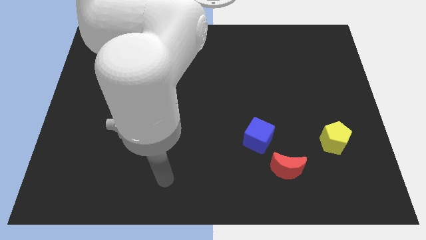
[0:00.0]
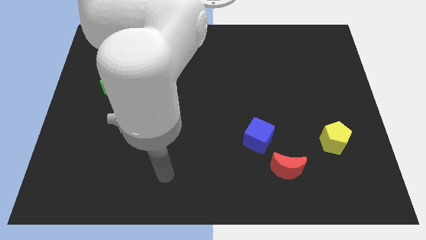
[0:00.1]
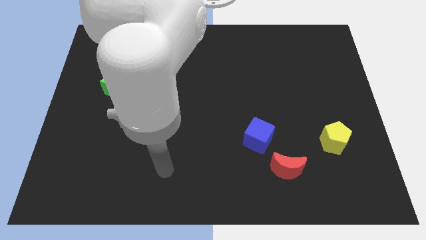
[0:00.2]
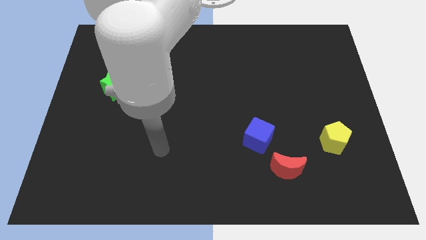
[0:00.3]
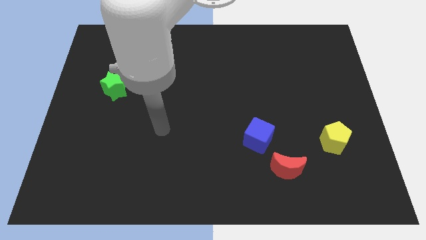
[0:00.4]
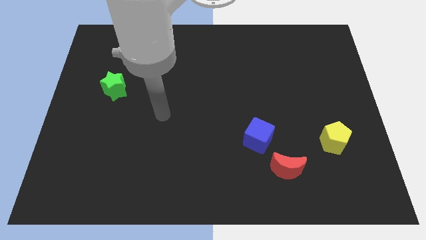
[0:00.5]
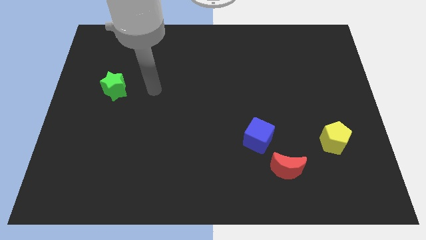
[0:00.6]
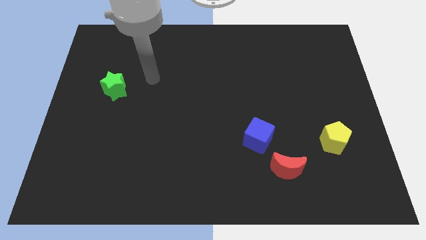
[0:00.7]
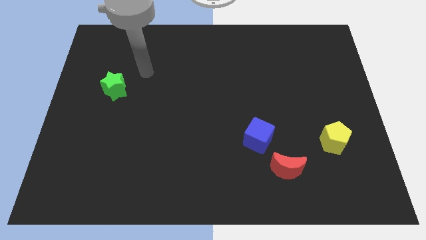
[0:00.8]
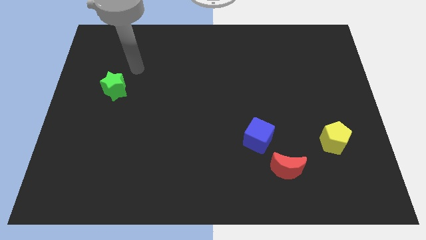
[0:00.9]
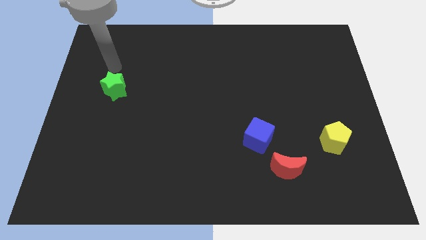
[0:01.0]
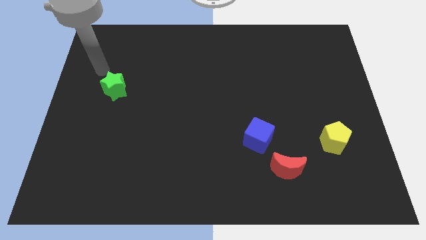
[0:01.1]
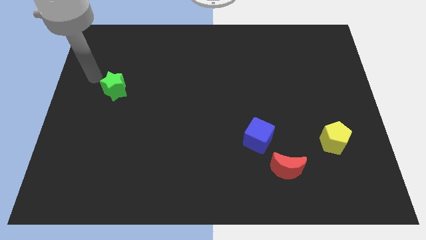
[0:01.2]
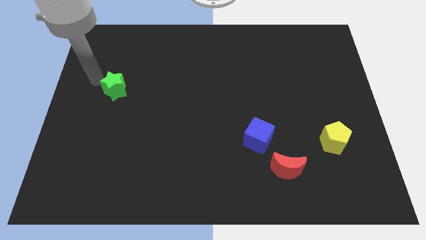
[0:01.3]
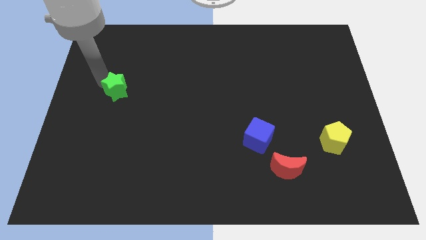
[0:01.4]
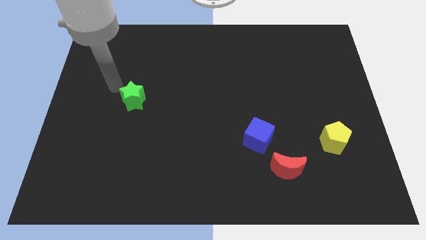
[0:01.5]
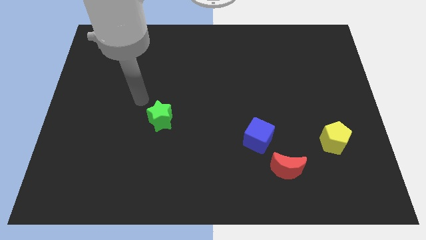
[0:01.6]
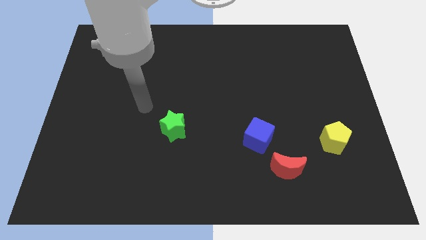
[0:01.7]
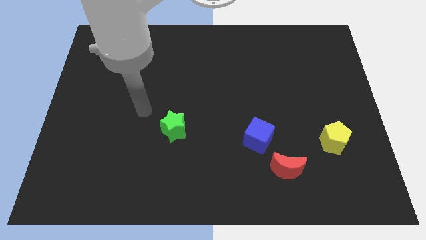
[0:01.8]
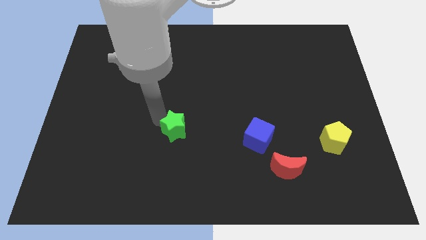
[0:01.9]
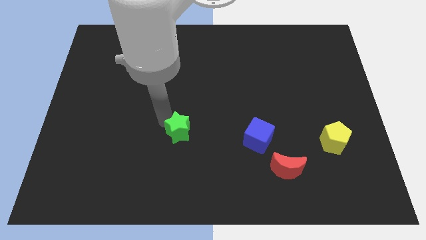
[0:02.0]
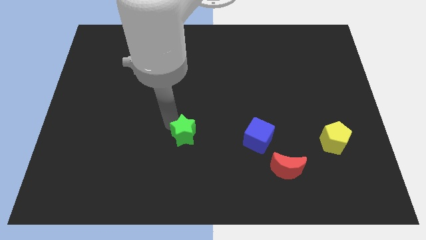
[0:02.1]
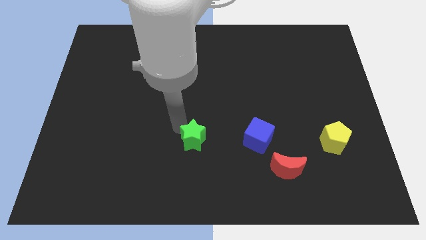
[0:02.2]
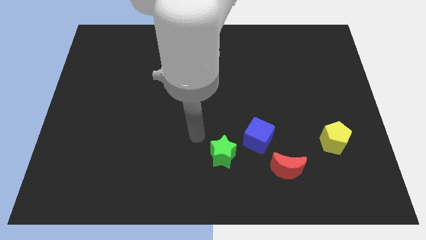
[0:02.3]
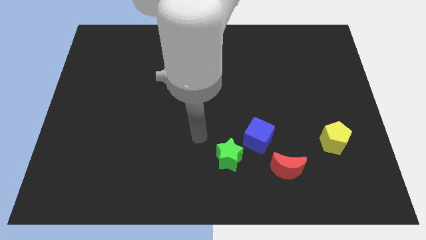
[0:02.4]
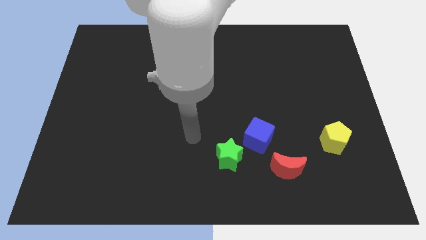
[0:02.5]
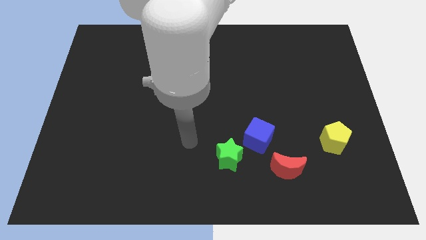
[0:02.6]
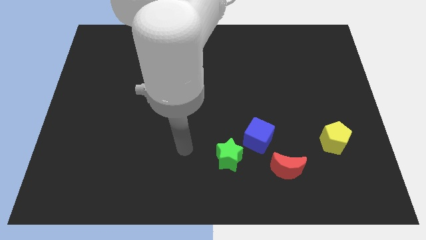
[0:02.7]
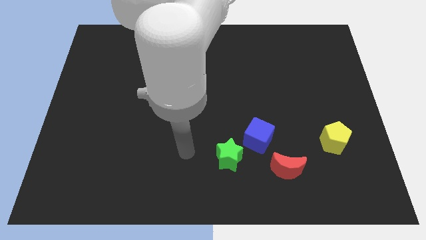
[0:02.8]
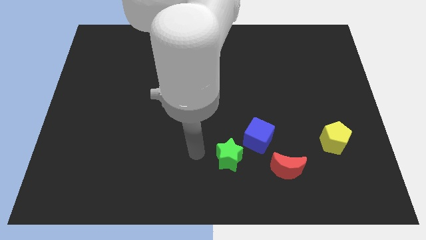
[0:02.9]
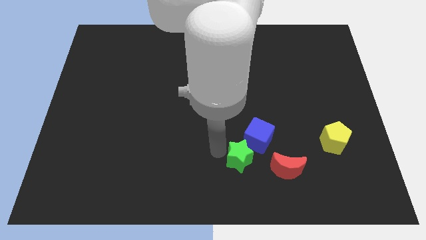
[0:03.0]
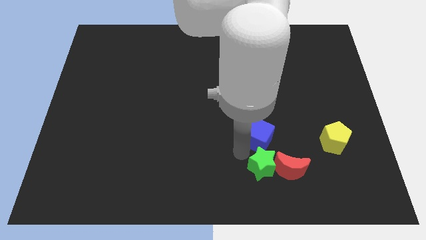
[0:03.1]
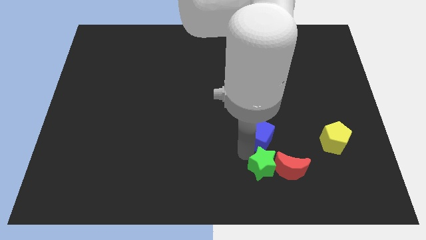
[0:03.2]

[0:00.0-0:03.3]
slide the green star next to the red moon

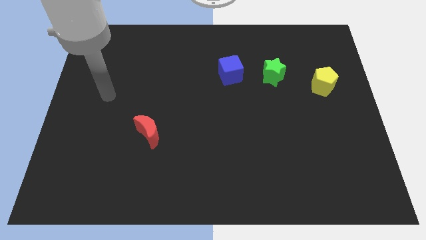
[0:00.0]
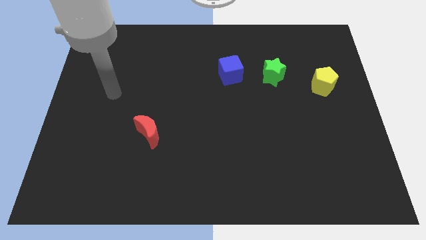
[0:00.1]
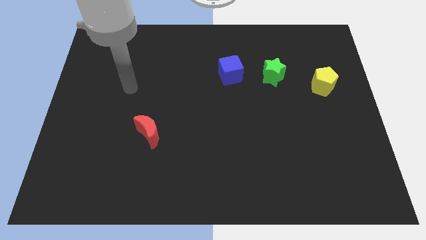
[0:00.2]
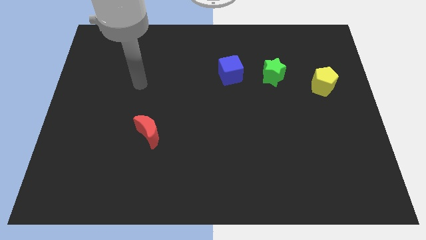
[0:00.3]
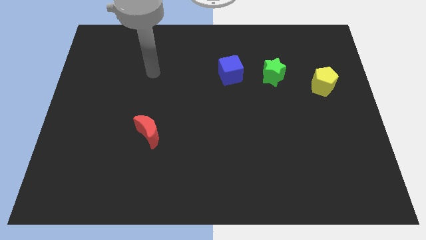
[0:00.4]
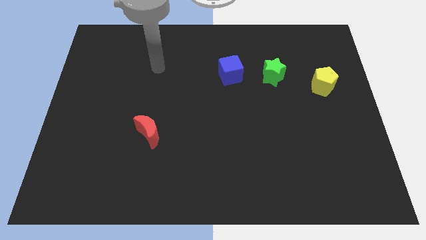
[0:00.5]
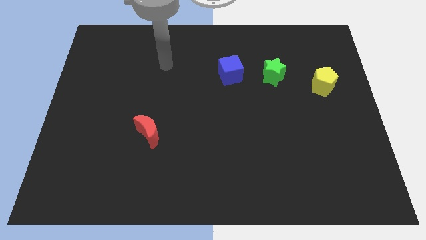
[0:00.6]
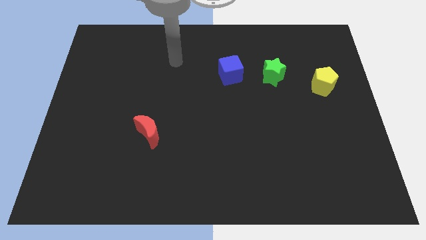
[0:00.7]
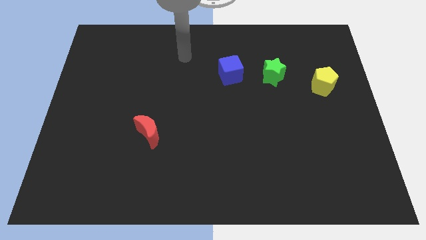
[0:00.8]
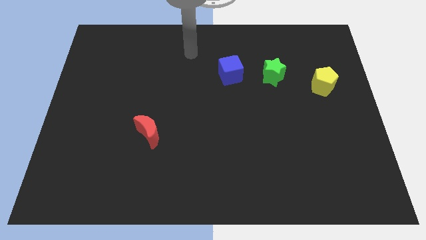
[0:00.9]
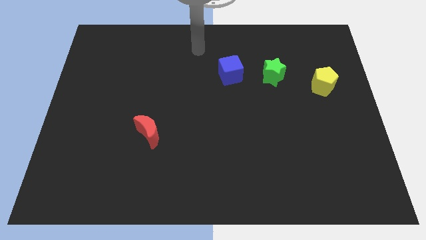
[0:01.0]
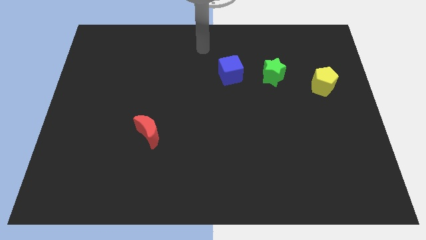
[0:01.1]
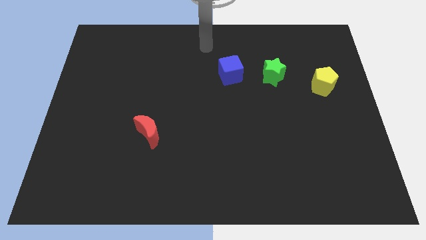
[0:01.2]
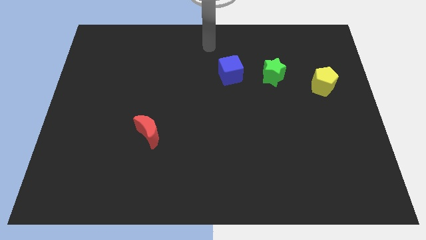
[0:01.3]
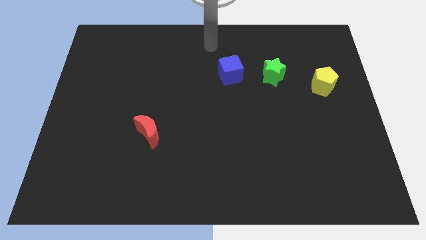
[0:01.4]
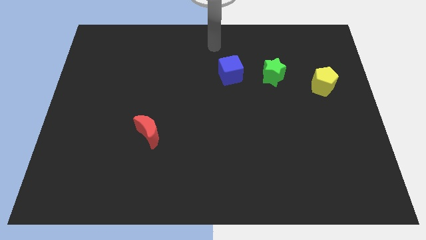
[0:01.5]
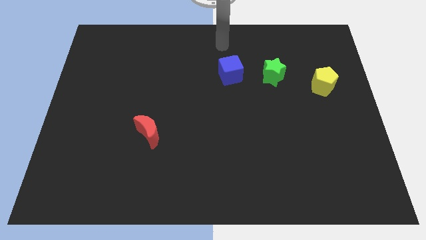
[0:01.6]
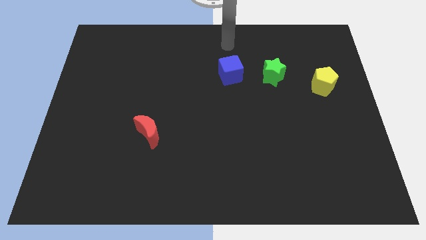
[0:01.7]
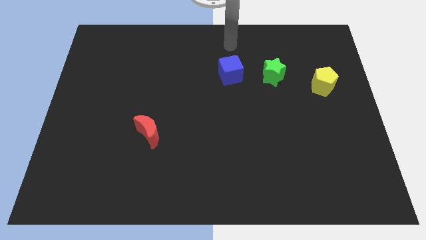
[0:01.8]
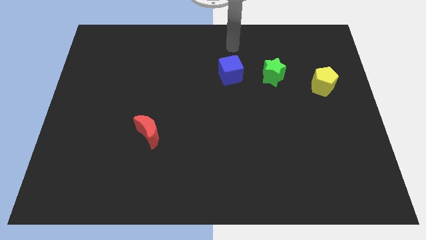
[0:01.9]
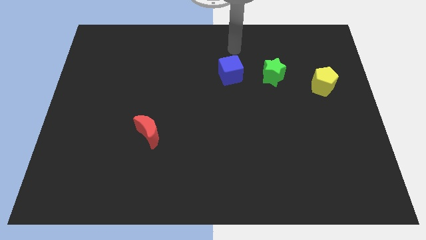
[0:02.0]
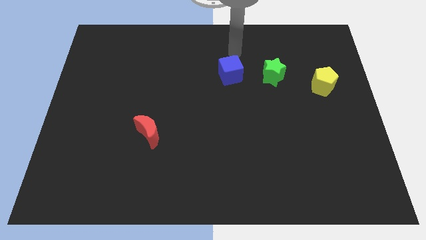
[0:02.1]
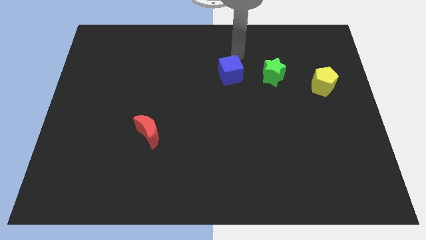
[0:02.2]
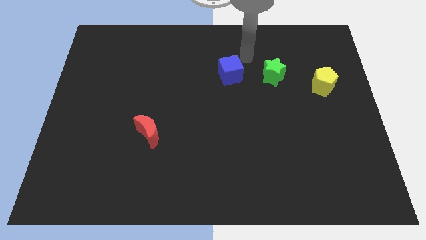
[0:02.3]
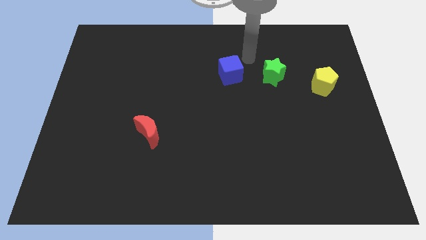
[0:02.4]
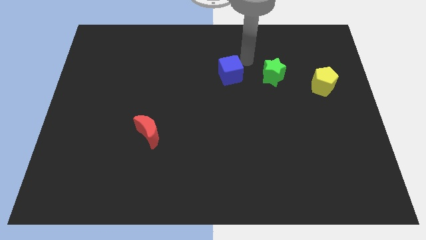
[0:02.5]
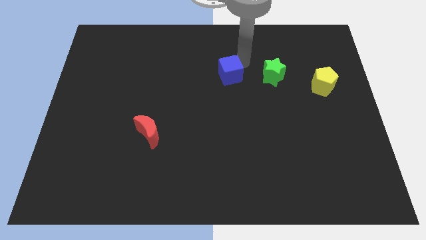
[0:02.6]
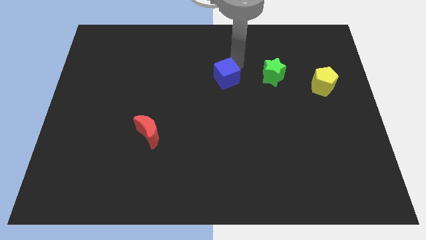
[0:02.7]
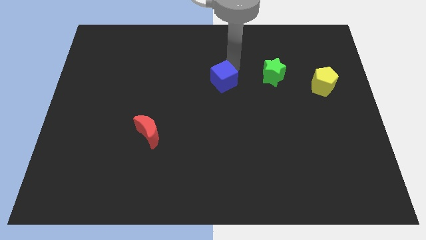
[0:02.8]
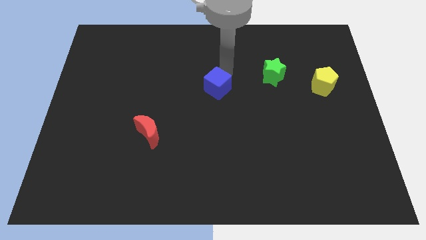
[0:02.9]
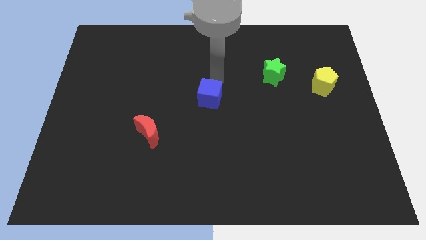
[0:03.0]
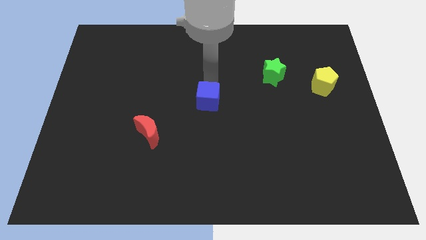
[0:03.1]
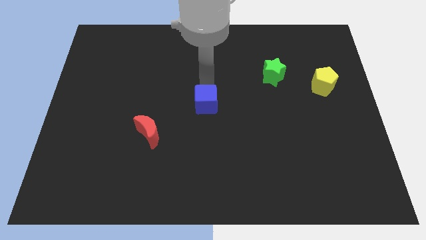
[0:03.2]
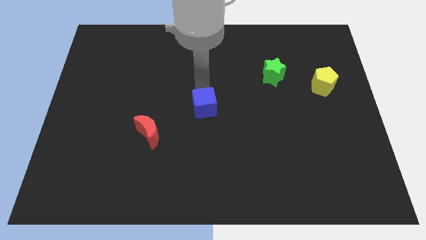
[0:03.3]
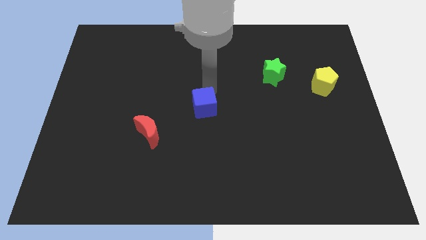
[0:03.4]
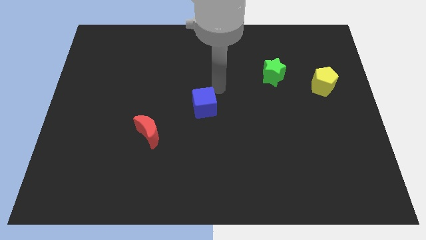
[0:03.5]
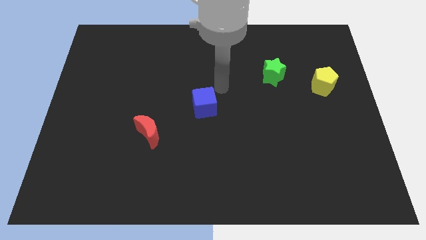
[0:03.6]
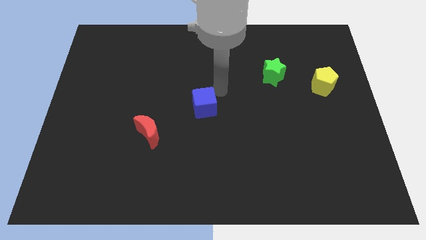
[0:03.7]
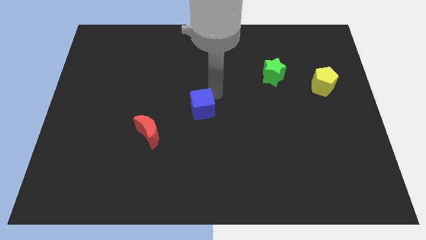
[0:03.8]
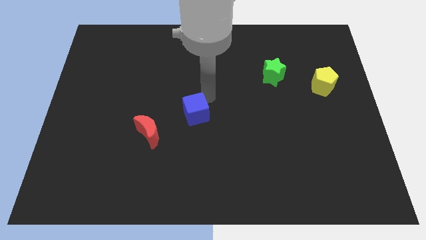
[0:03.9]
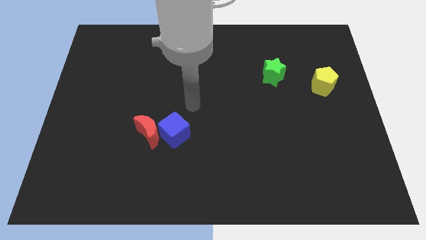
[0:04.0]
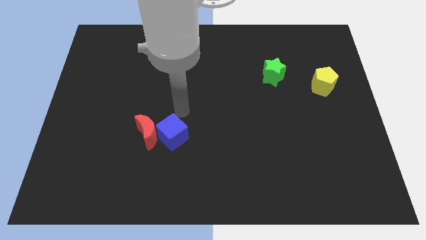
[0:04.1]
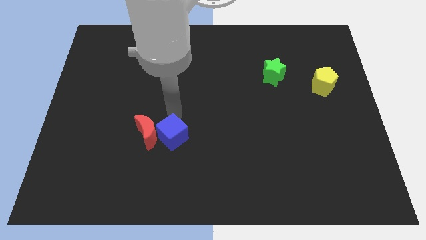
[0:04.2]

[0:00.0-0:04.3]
slide the blue block close to the moon

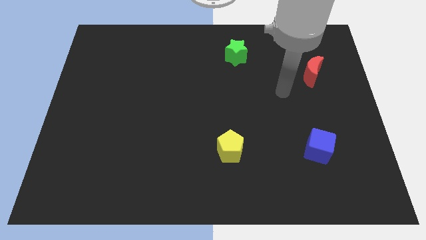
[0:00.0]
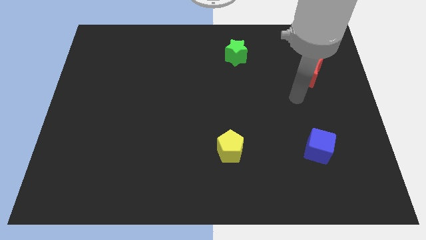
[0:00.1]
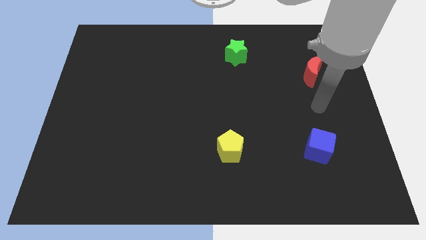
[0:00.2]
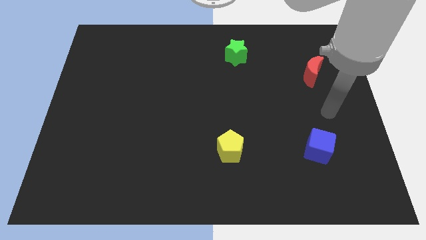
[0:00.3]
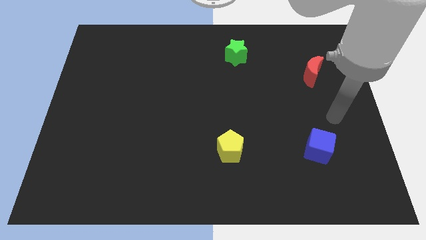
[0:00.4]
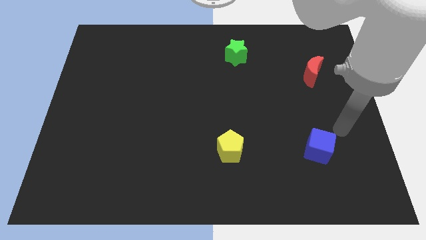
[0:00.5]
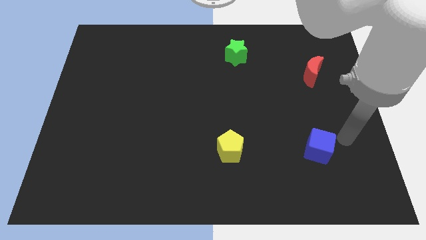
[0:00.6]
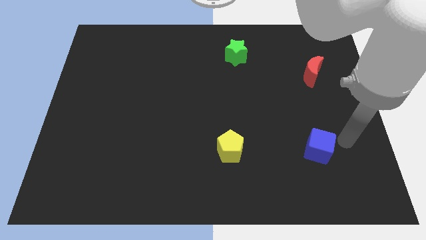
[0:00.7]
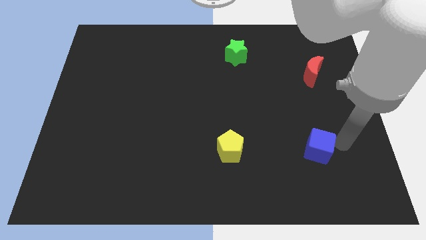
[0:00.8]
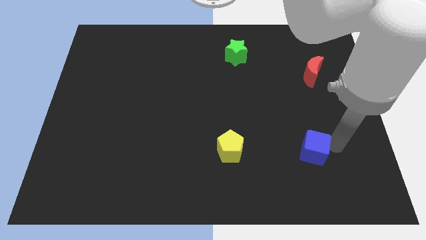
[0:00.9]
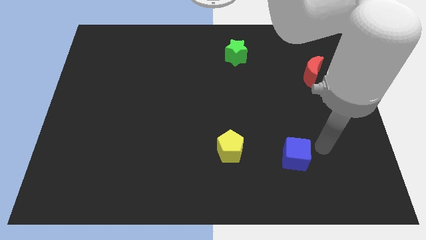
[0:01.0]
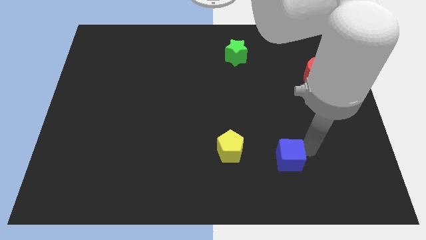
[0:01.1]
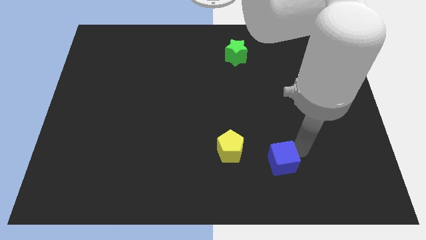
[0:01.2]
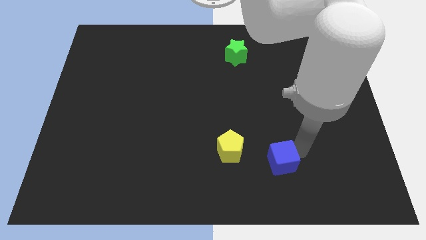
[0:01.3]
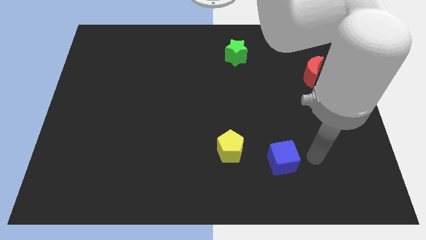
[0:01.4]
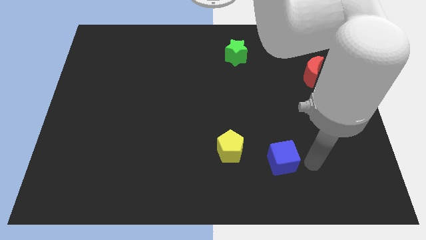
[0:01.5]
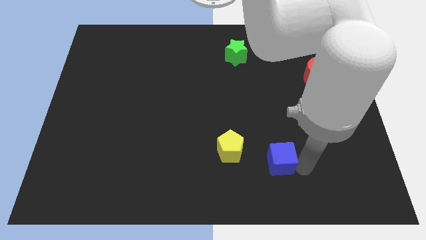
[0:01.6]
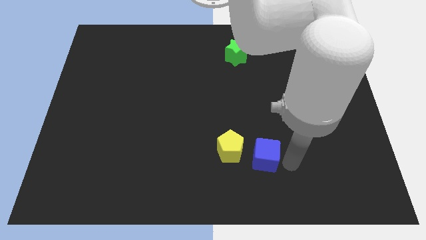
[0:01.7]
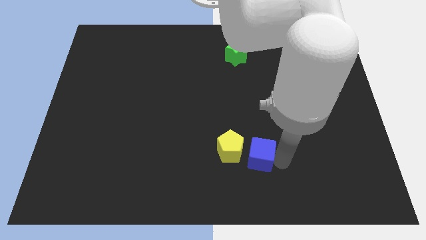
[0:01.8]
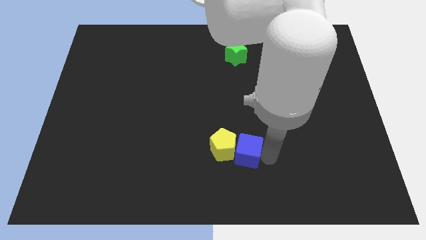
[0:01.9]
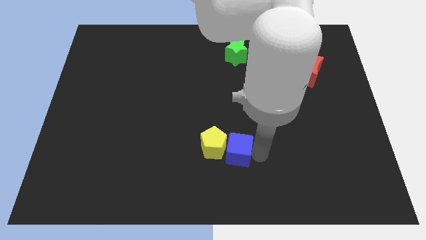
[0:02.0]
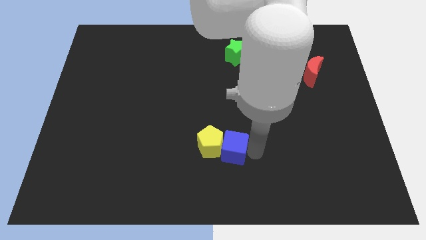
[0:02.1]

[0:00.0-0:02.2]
slide the cube next to the yellow pentagon
